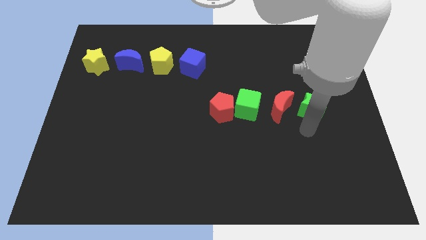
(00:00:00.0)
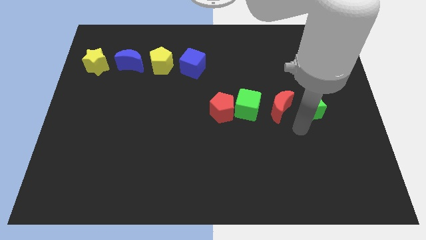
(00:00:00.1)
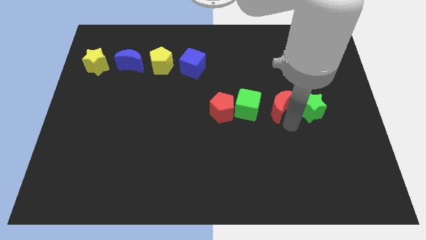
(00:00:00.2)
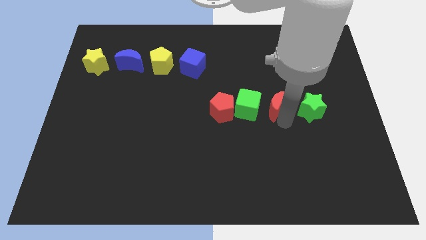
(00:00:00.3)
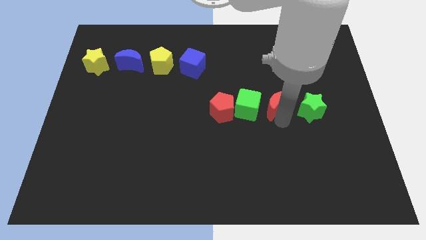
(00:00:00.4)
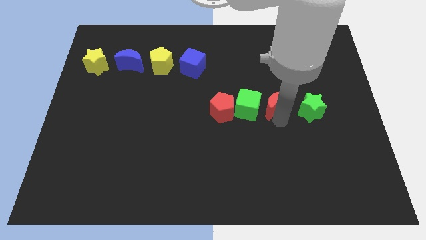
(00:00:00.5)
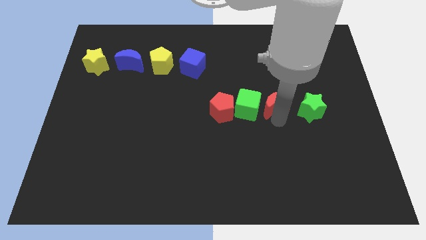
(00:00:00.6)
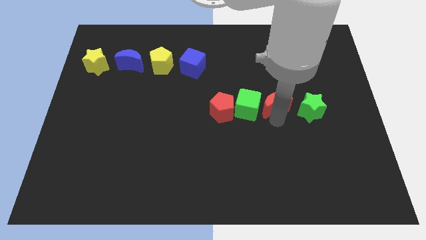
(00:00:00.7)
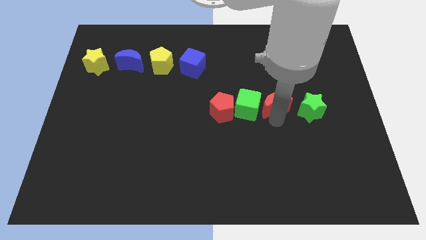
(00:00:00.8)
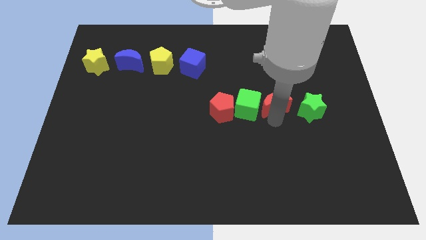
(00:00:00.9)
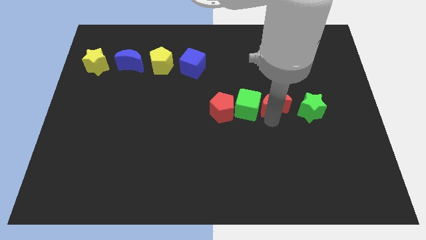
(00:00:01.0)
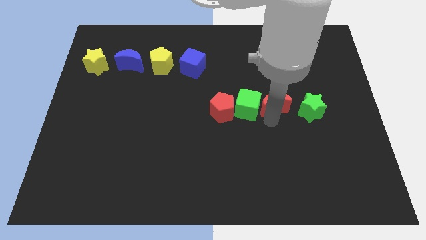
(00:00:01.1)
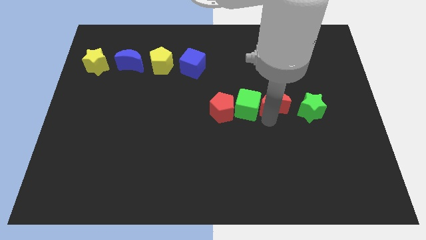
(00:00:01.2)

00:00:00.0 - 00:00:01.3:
place red moon close to green cube

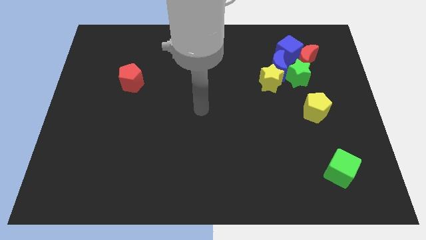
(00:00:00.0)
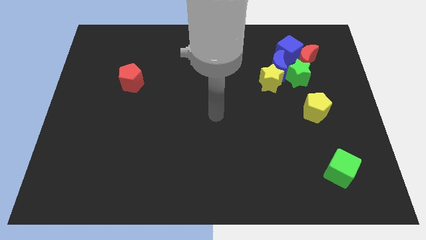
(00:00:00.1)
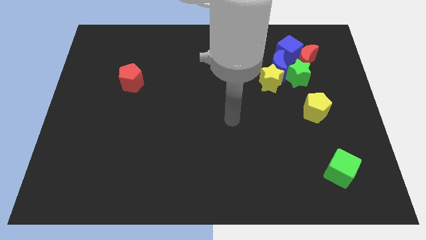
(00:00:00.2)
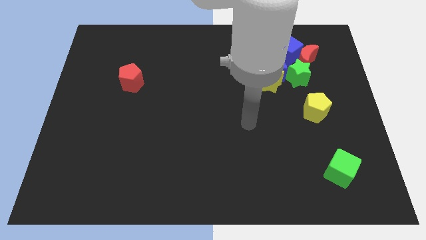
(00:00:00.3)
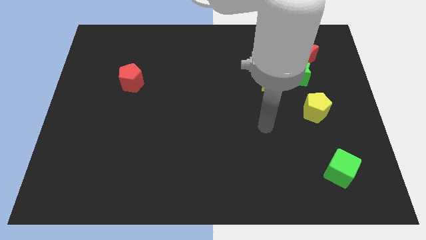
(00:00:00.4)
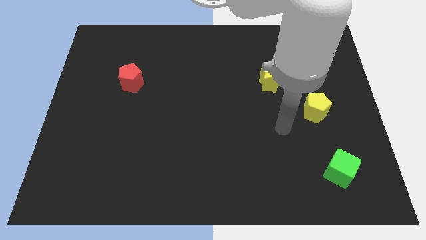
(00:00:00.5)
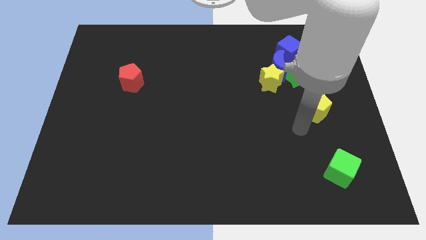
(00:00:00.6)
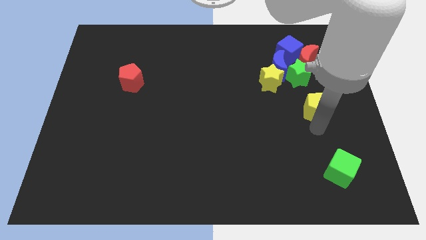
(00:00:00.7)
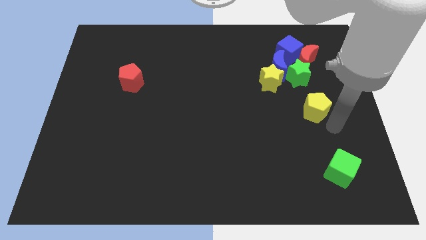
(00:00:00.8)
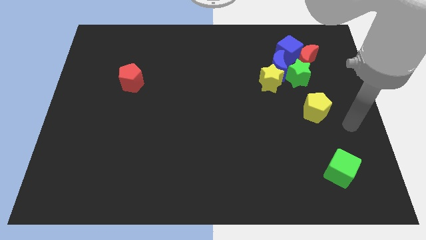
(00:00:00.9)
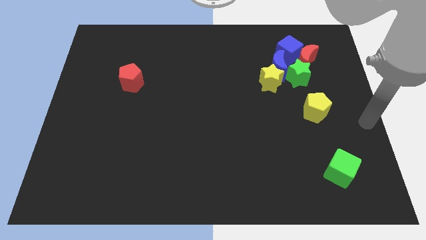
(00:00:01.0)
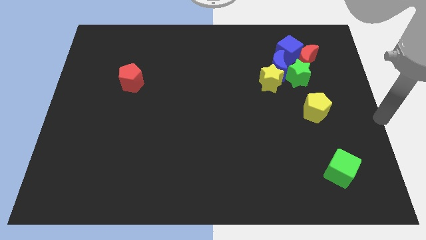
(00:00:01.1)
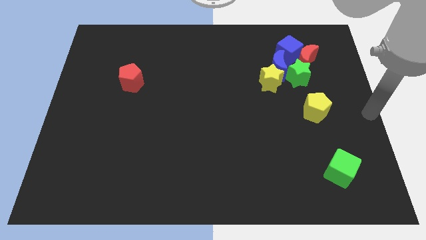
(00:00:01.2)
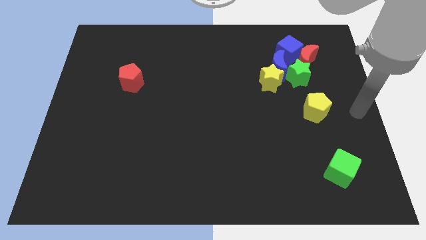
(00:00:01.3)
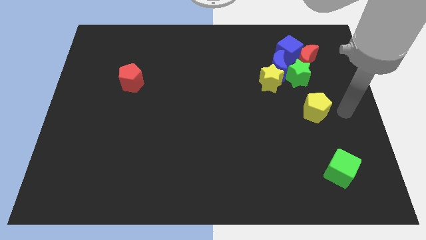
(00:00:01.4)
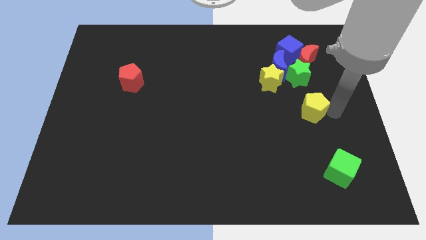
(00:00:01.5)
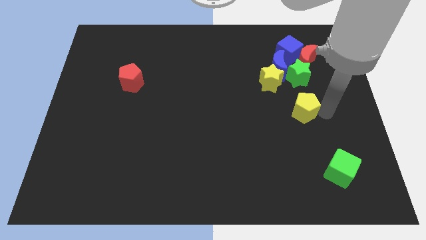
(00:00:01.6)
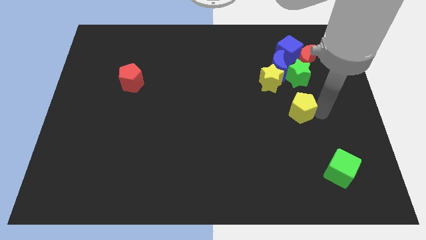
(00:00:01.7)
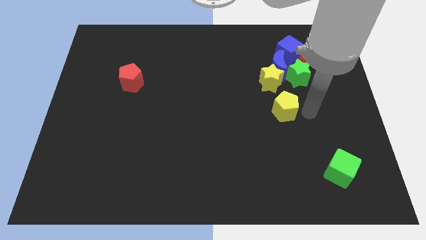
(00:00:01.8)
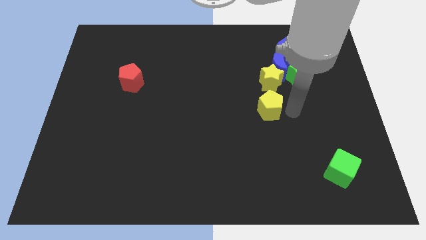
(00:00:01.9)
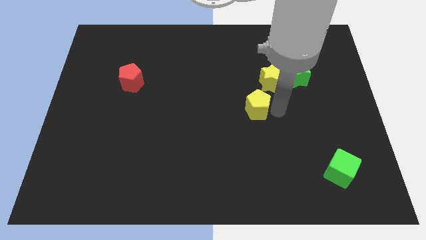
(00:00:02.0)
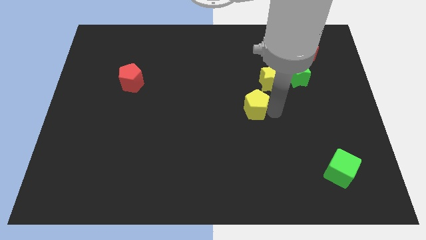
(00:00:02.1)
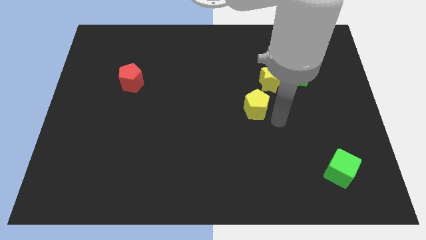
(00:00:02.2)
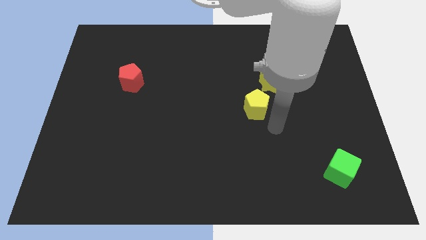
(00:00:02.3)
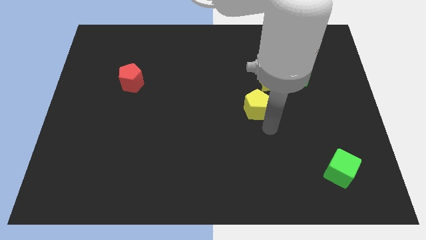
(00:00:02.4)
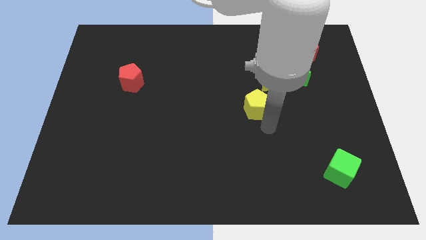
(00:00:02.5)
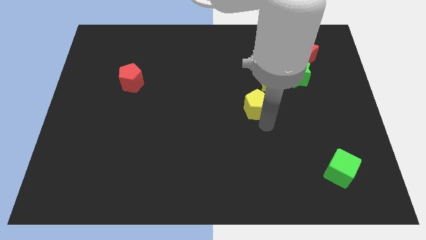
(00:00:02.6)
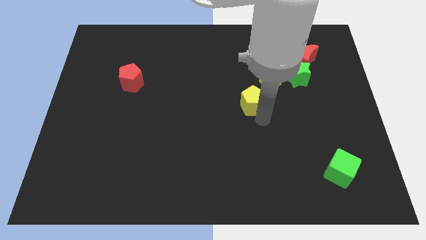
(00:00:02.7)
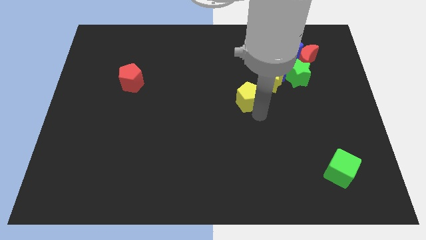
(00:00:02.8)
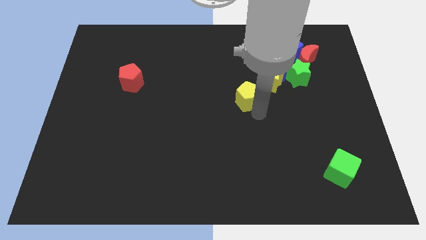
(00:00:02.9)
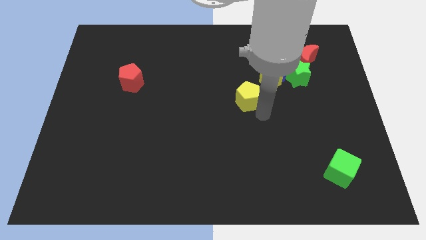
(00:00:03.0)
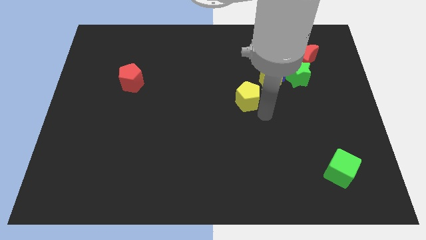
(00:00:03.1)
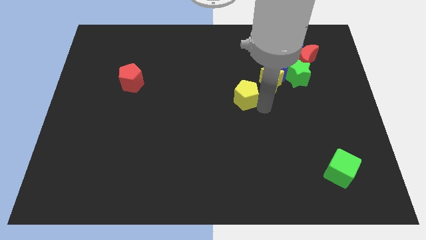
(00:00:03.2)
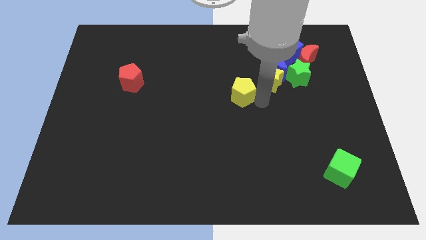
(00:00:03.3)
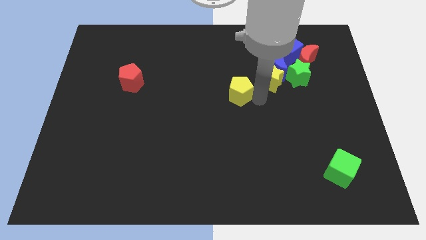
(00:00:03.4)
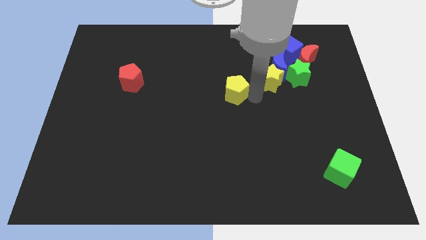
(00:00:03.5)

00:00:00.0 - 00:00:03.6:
move the yellow pentagon to the left of the yellow star

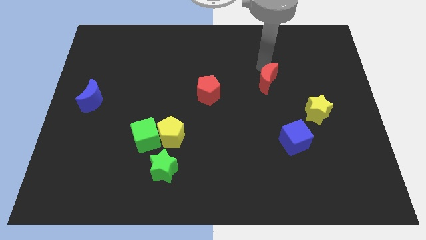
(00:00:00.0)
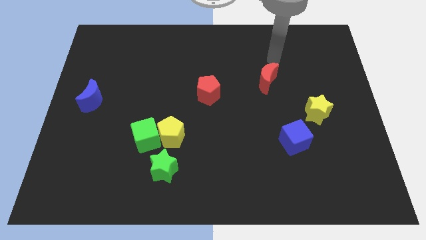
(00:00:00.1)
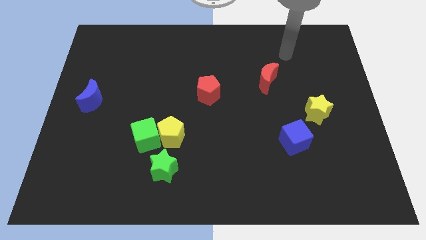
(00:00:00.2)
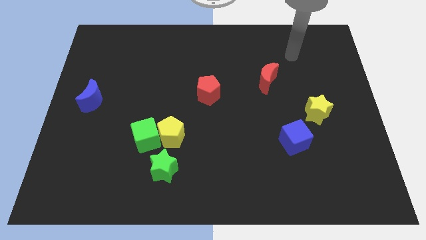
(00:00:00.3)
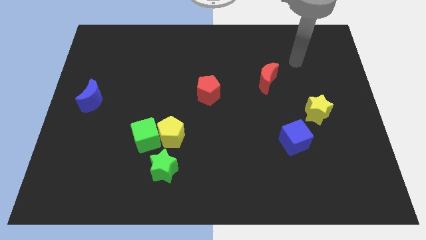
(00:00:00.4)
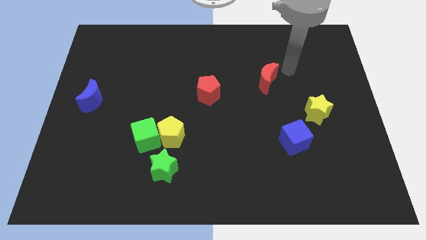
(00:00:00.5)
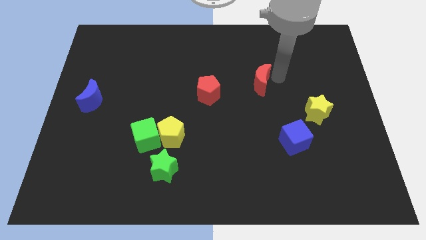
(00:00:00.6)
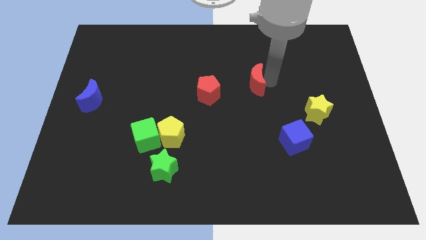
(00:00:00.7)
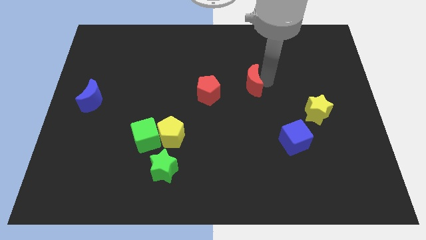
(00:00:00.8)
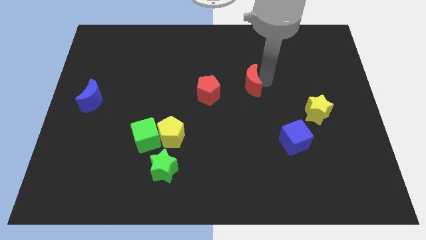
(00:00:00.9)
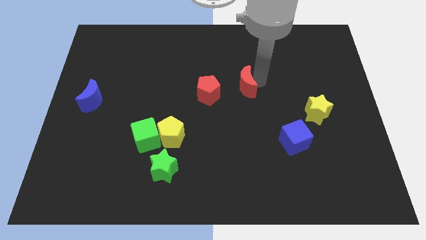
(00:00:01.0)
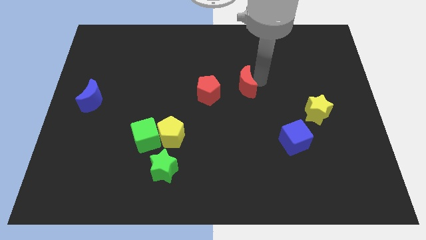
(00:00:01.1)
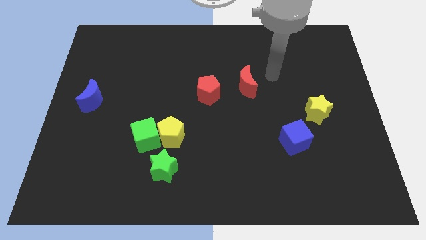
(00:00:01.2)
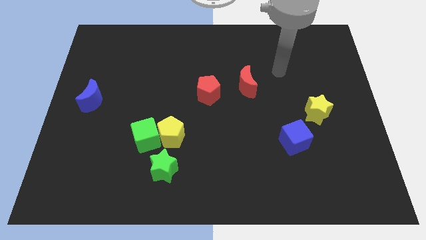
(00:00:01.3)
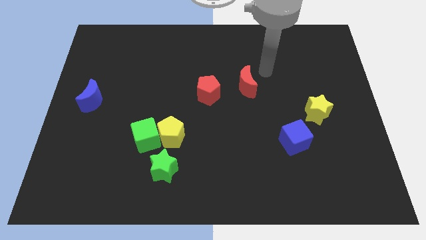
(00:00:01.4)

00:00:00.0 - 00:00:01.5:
move red crescent right to the red pentagon

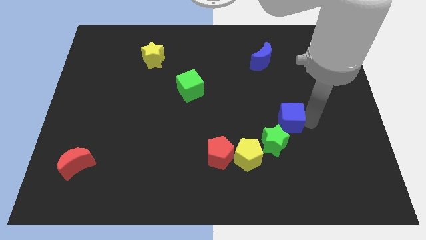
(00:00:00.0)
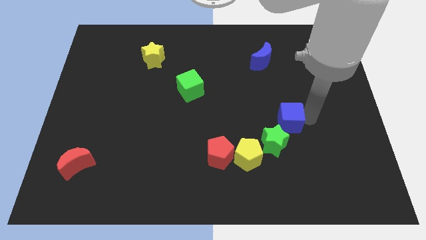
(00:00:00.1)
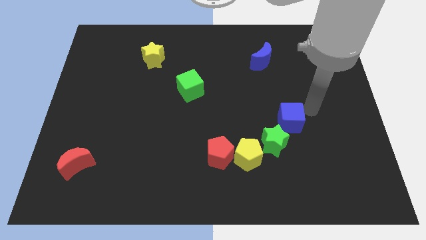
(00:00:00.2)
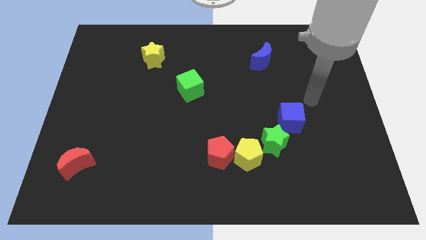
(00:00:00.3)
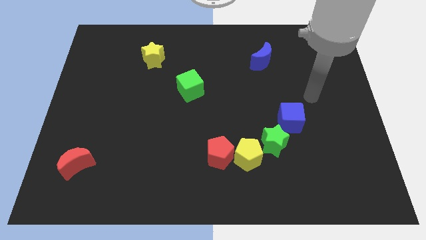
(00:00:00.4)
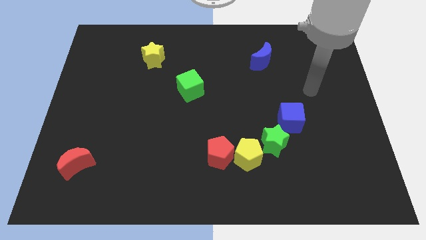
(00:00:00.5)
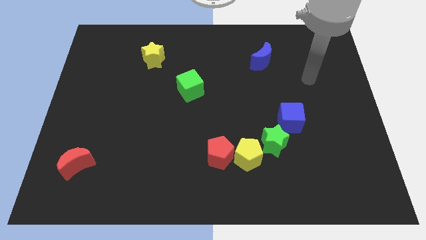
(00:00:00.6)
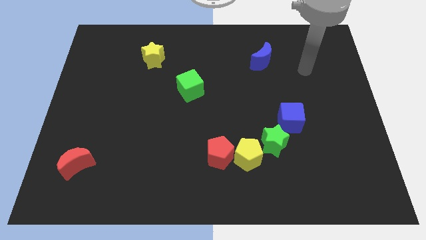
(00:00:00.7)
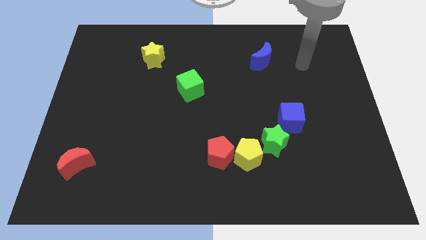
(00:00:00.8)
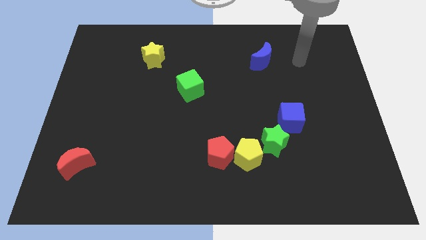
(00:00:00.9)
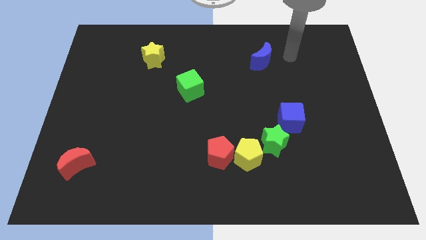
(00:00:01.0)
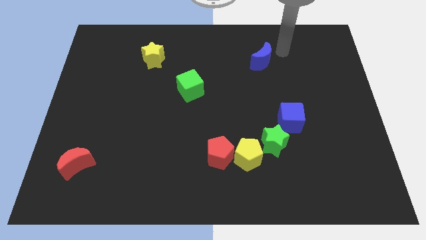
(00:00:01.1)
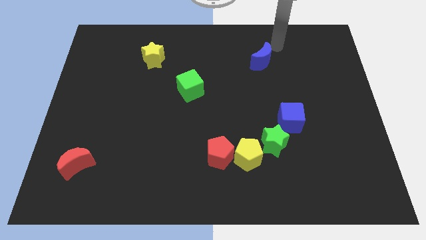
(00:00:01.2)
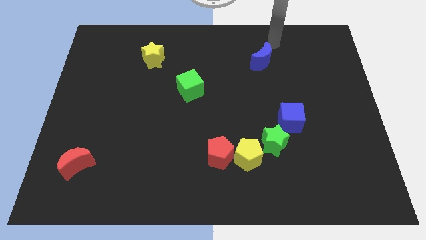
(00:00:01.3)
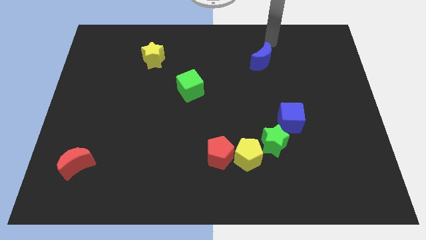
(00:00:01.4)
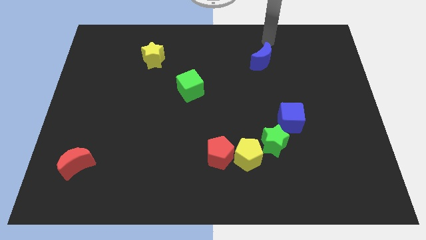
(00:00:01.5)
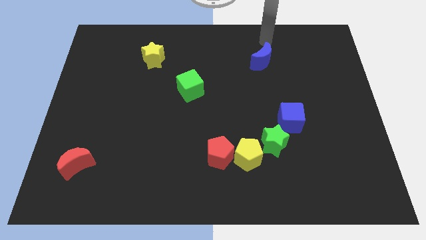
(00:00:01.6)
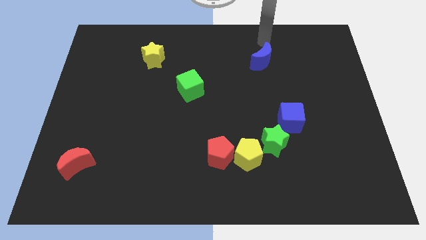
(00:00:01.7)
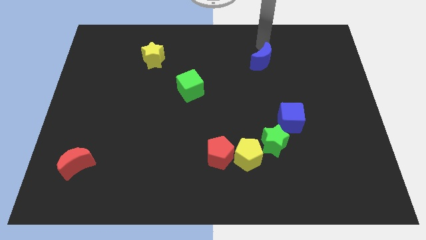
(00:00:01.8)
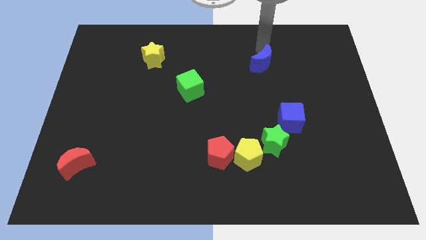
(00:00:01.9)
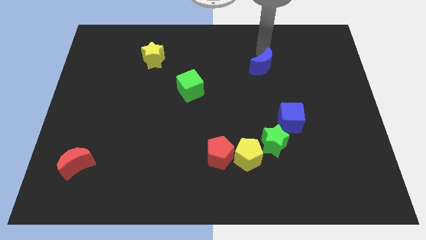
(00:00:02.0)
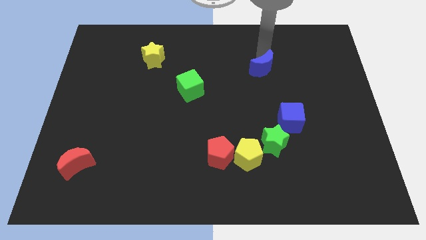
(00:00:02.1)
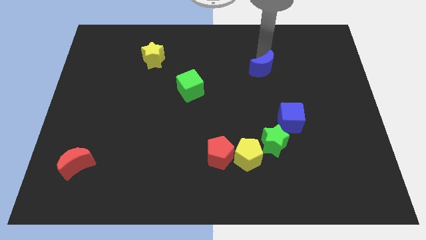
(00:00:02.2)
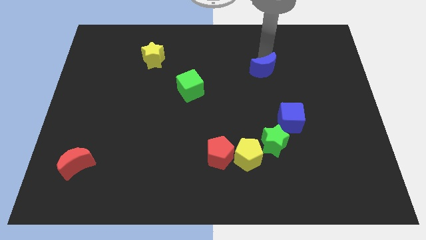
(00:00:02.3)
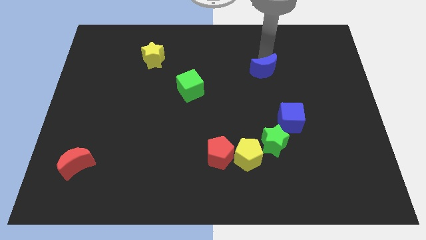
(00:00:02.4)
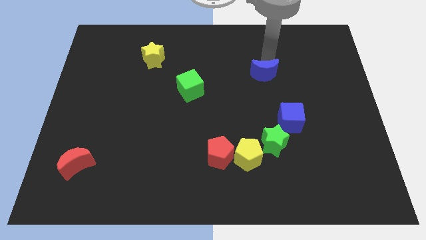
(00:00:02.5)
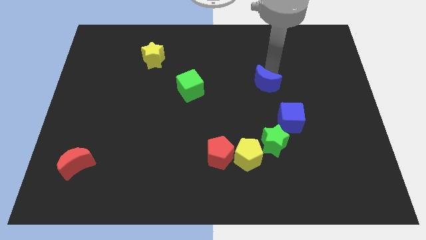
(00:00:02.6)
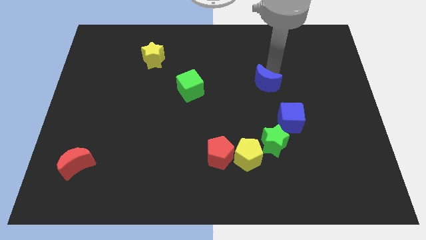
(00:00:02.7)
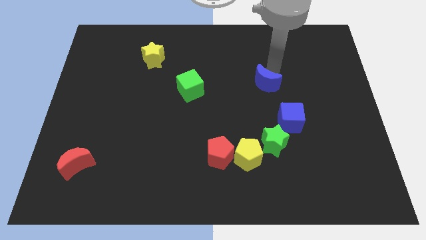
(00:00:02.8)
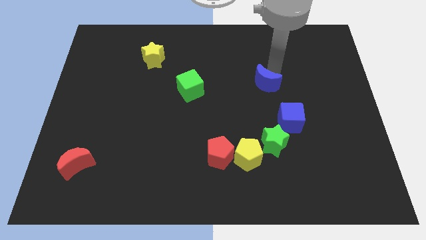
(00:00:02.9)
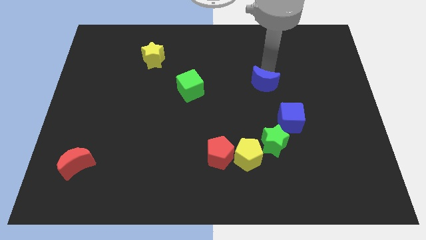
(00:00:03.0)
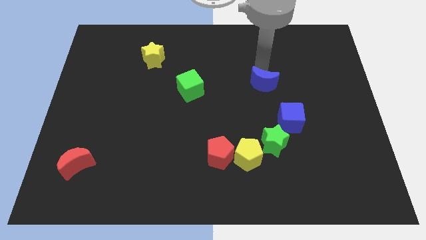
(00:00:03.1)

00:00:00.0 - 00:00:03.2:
move the blue crescent to the right of the green cube
